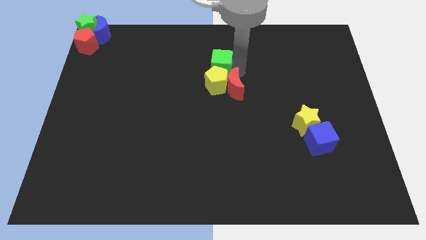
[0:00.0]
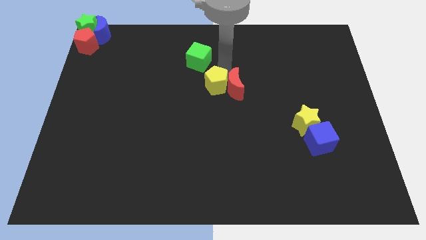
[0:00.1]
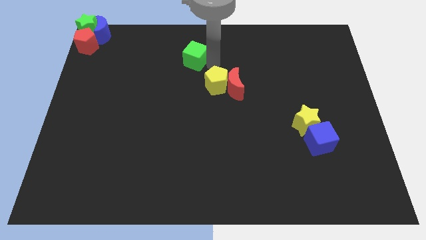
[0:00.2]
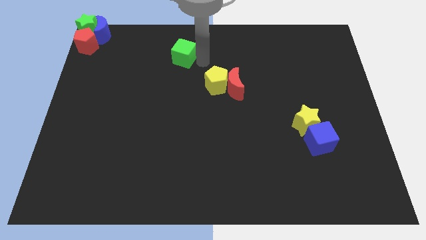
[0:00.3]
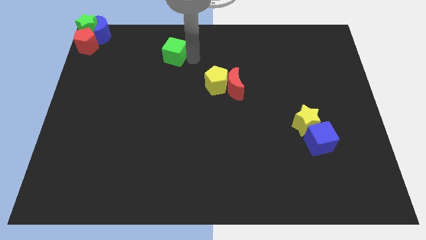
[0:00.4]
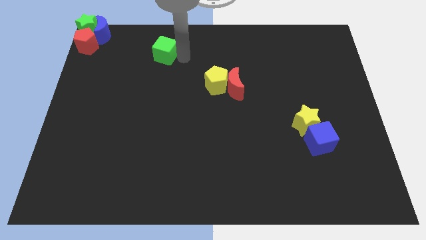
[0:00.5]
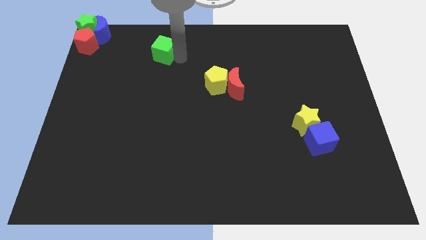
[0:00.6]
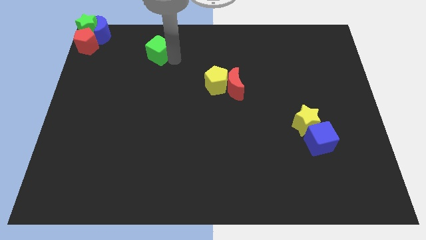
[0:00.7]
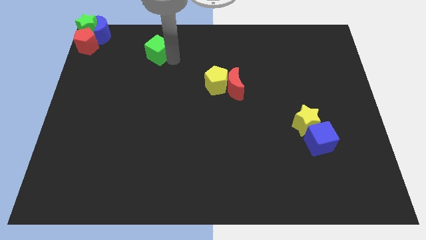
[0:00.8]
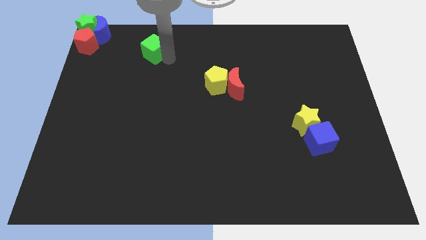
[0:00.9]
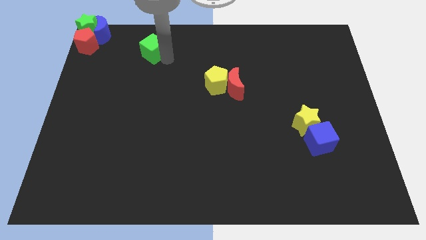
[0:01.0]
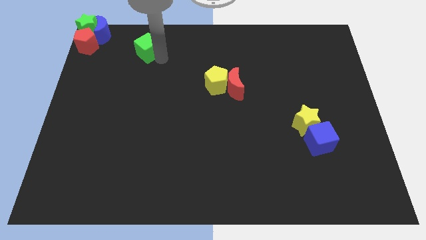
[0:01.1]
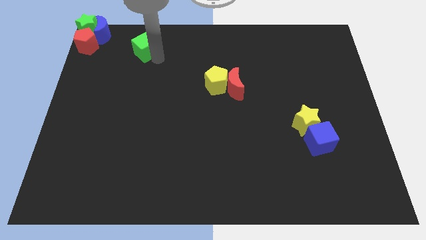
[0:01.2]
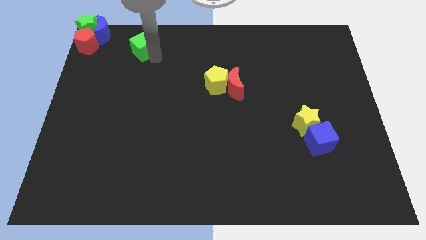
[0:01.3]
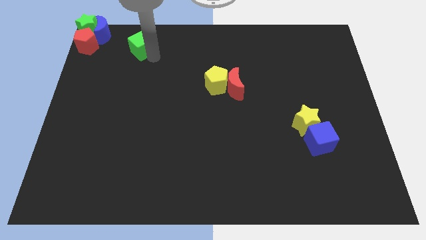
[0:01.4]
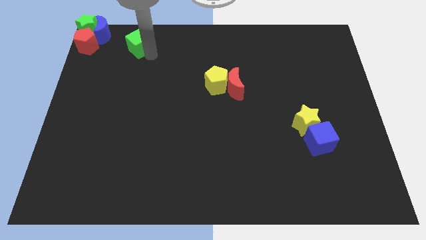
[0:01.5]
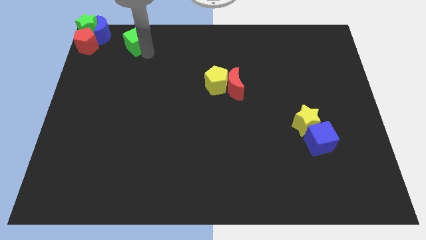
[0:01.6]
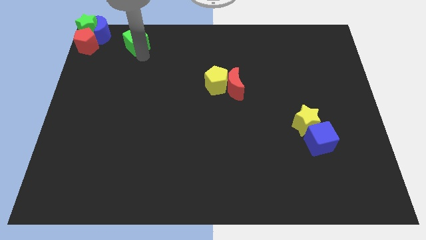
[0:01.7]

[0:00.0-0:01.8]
separate the green cube from the red crescent and the yellow pentagon

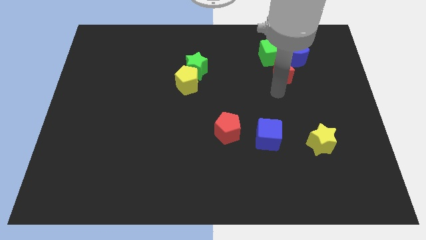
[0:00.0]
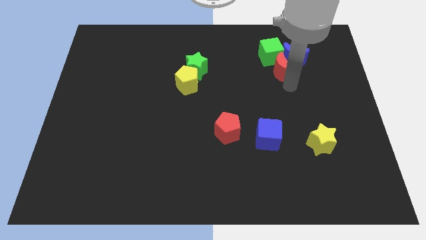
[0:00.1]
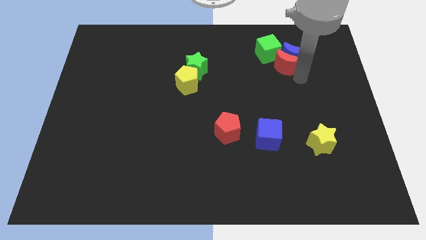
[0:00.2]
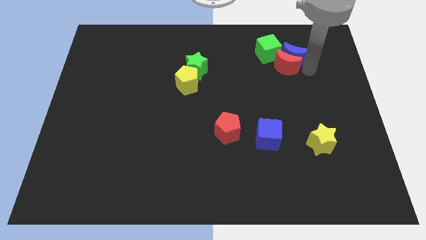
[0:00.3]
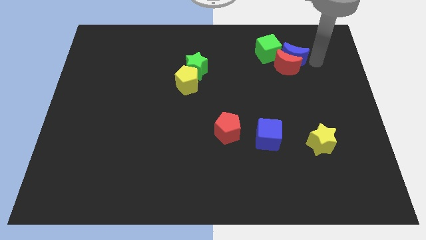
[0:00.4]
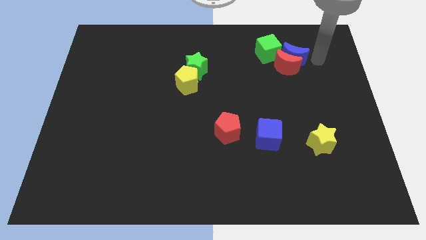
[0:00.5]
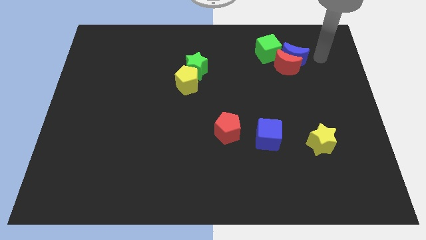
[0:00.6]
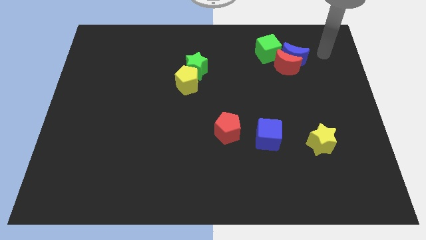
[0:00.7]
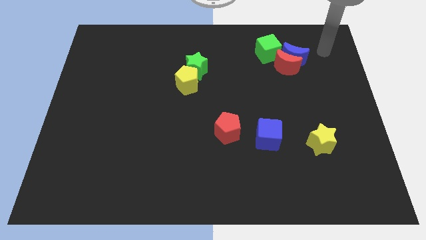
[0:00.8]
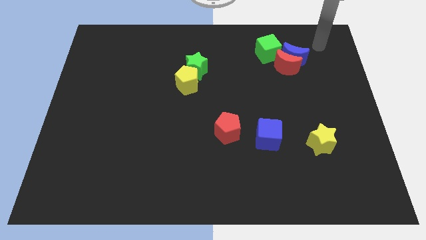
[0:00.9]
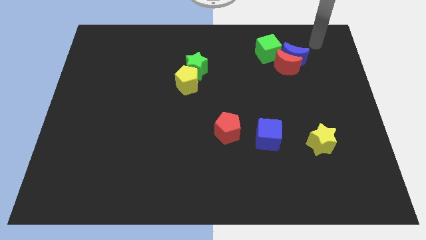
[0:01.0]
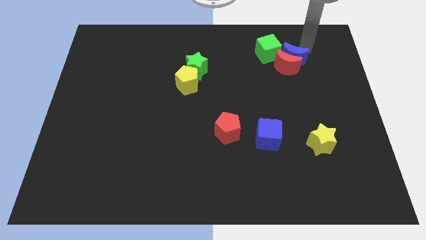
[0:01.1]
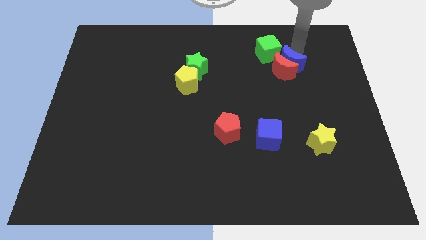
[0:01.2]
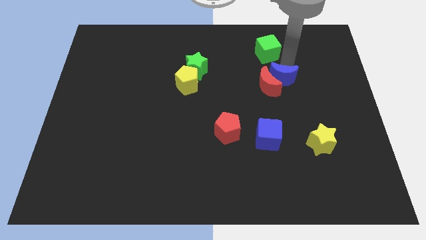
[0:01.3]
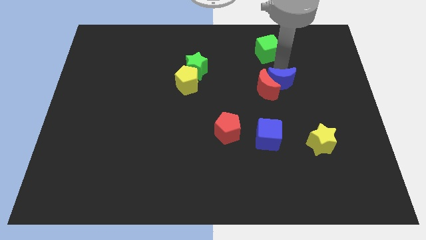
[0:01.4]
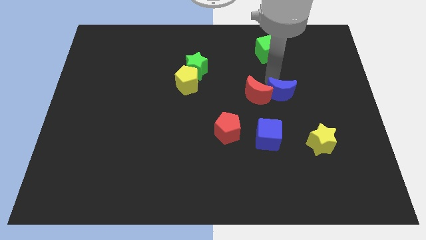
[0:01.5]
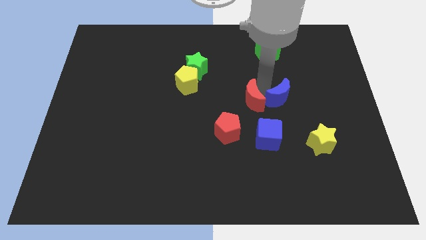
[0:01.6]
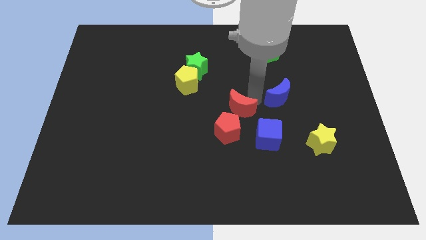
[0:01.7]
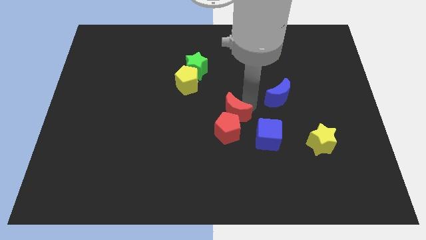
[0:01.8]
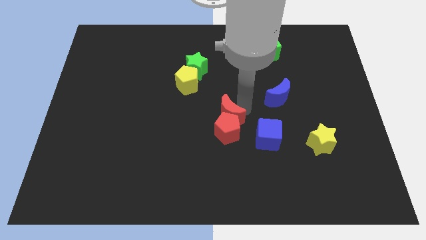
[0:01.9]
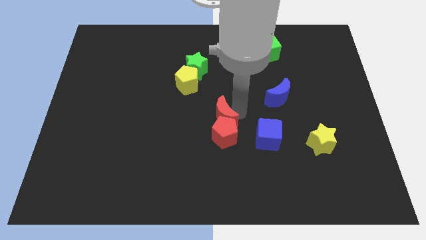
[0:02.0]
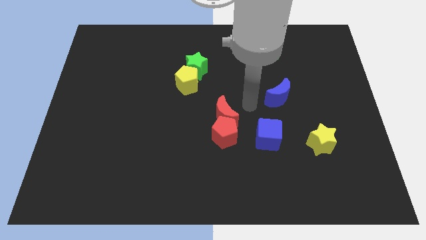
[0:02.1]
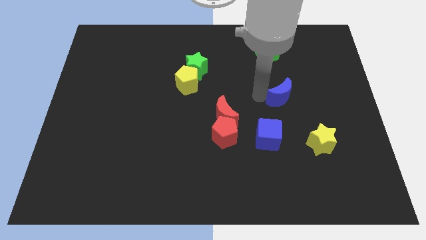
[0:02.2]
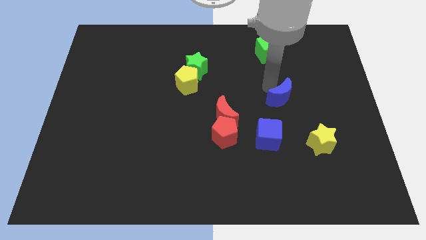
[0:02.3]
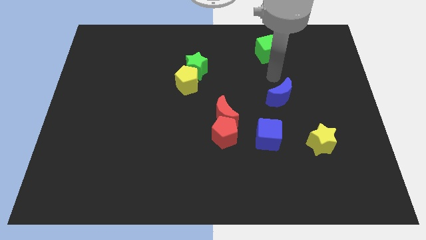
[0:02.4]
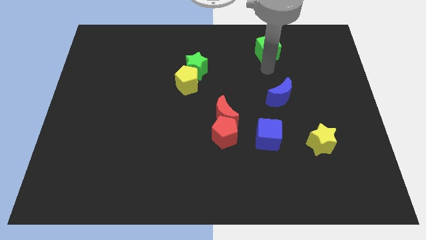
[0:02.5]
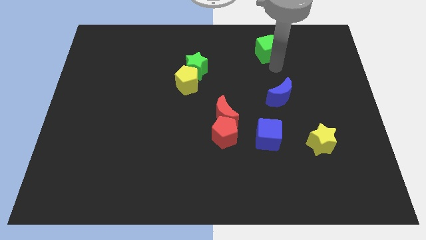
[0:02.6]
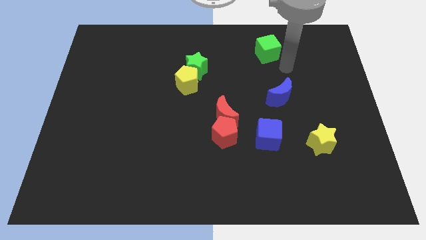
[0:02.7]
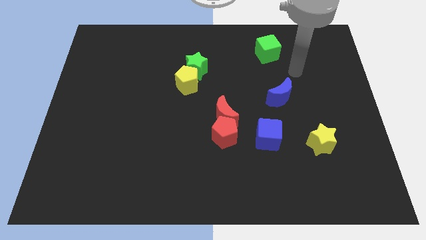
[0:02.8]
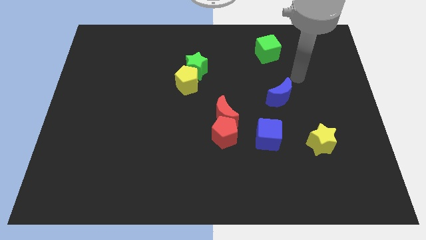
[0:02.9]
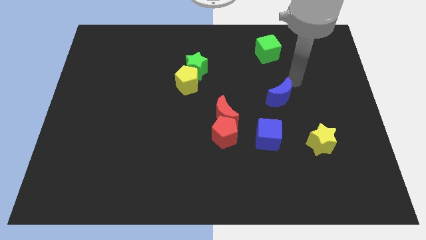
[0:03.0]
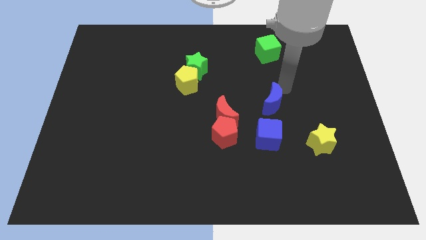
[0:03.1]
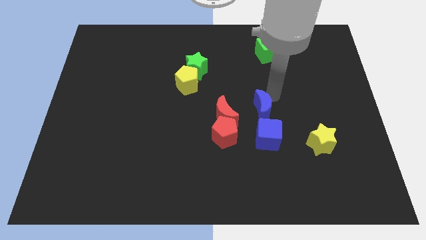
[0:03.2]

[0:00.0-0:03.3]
place blue moon above blue cube

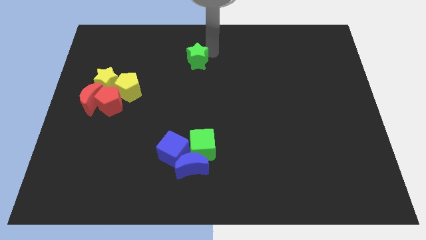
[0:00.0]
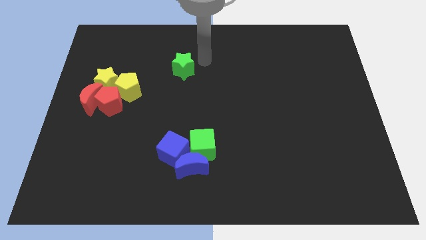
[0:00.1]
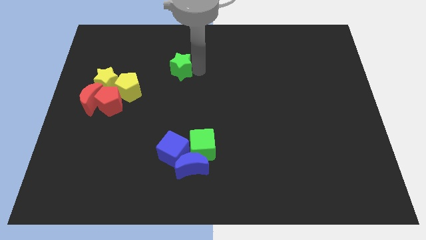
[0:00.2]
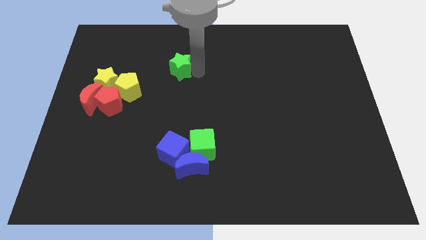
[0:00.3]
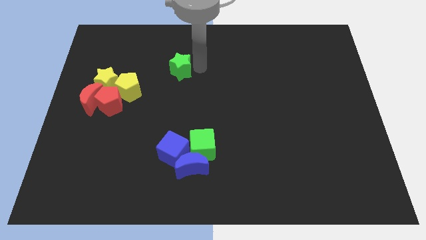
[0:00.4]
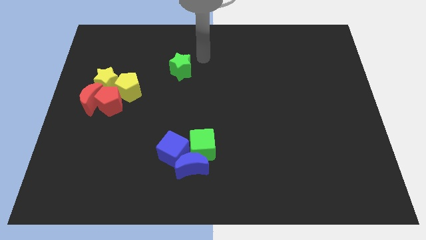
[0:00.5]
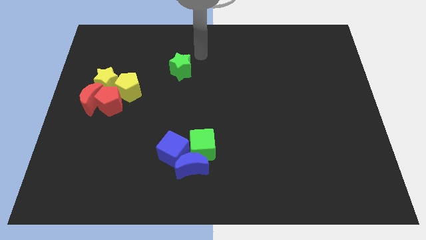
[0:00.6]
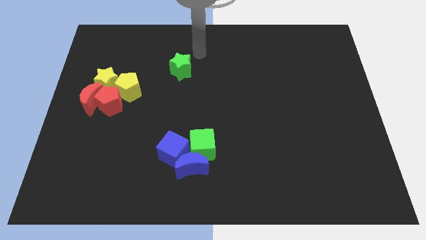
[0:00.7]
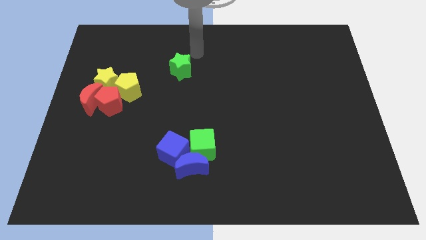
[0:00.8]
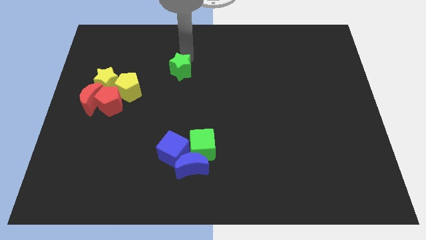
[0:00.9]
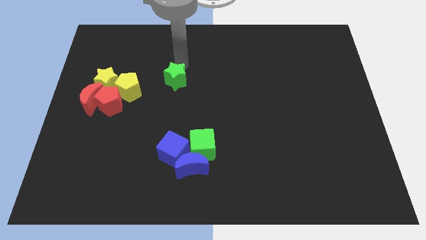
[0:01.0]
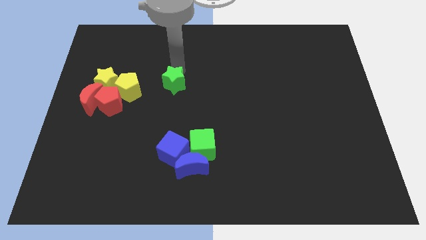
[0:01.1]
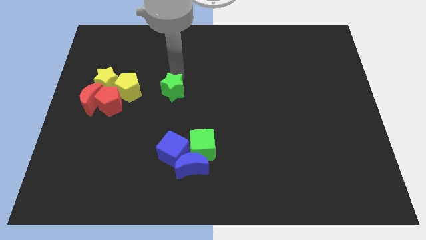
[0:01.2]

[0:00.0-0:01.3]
push the green star right to the yellow pentagon

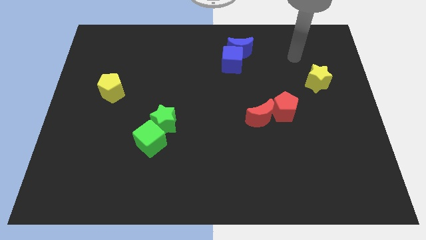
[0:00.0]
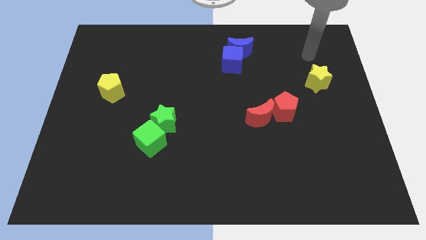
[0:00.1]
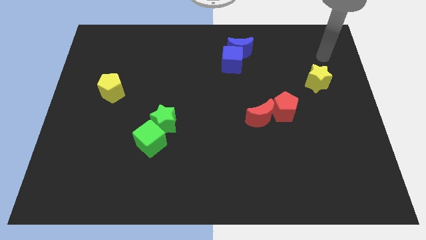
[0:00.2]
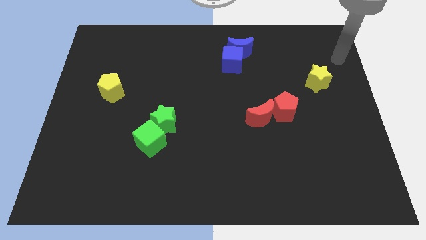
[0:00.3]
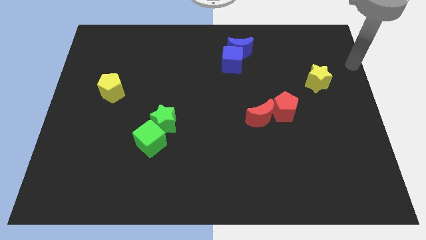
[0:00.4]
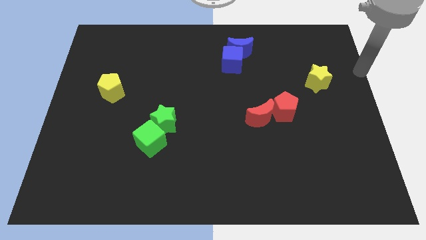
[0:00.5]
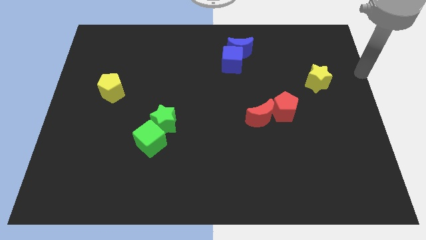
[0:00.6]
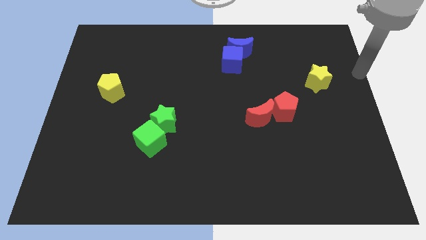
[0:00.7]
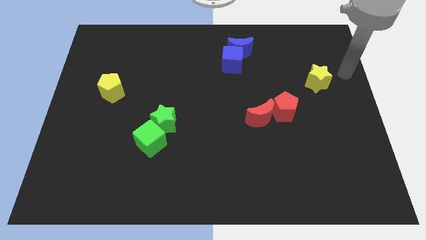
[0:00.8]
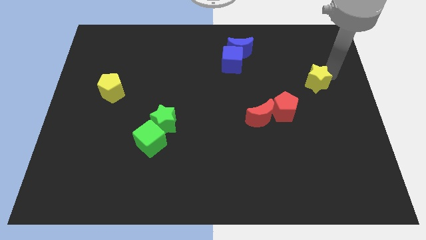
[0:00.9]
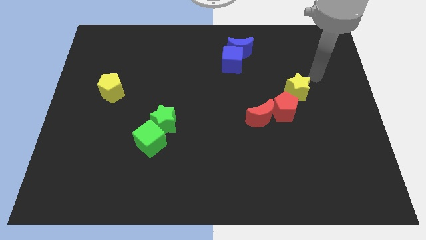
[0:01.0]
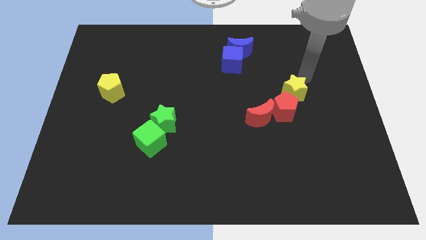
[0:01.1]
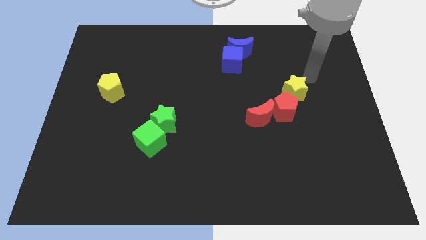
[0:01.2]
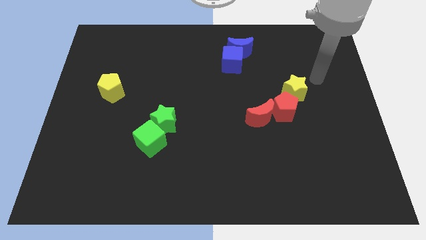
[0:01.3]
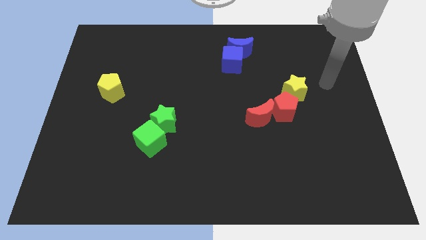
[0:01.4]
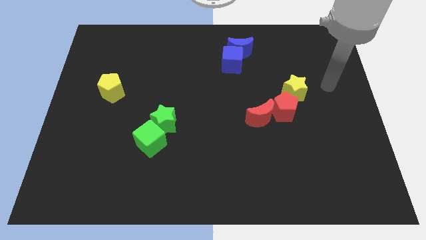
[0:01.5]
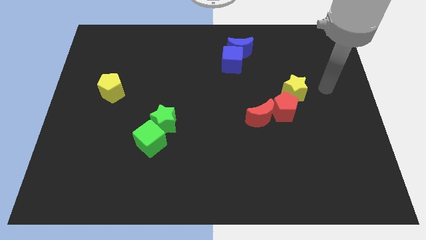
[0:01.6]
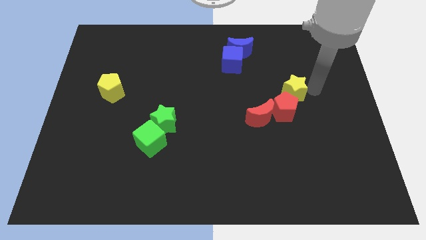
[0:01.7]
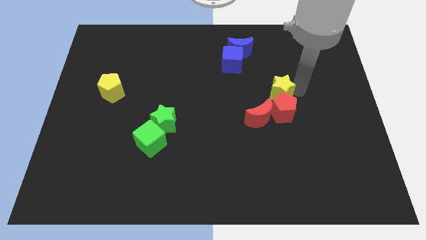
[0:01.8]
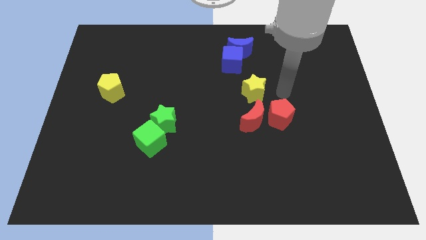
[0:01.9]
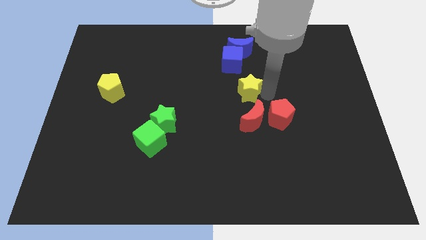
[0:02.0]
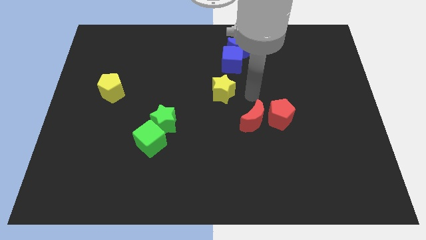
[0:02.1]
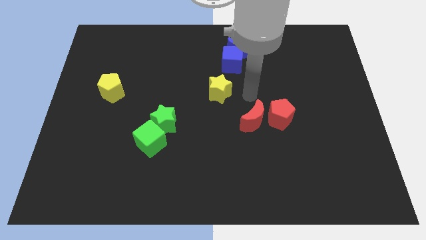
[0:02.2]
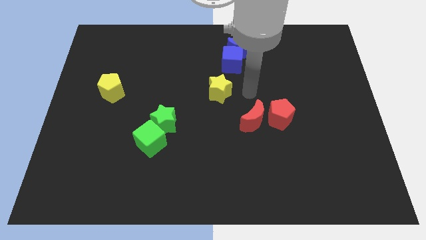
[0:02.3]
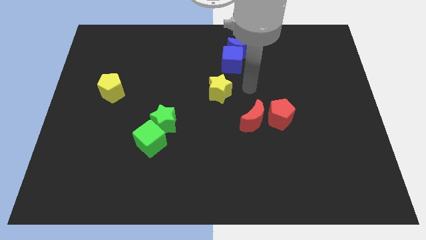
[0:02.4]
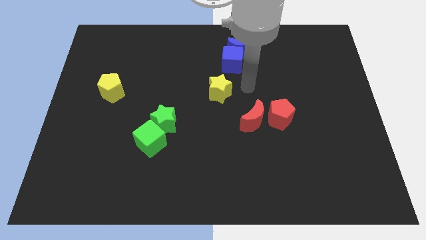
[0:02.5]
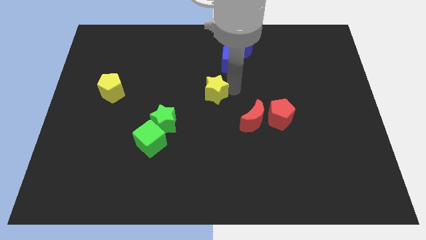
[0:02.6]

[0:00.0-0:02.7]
move yellow star to the center of the board
